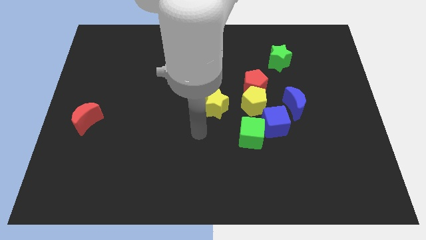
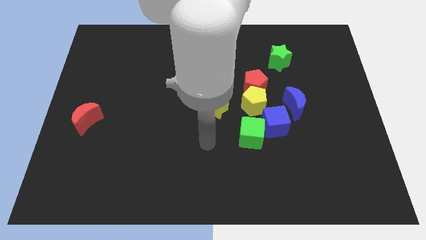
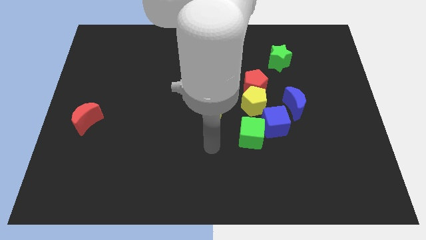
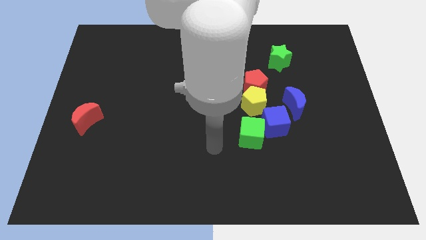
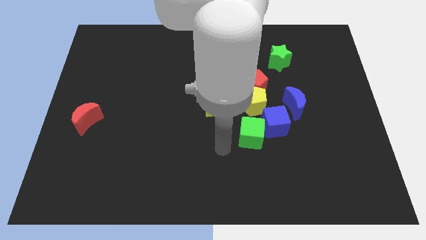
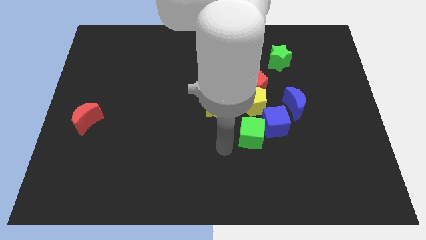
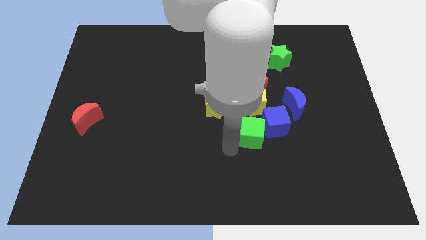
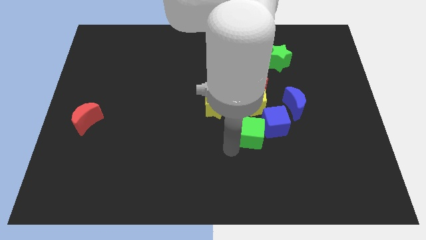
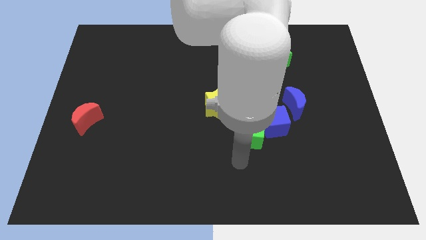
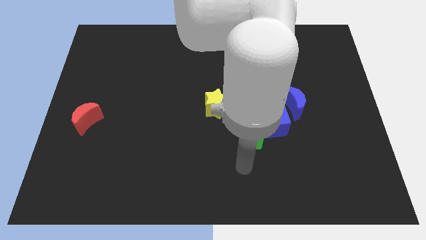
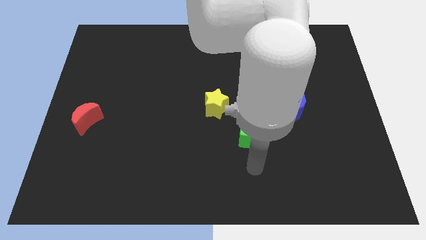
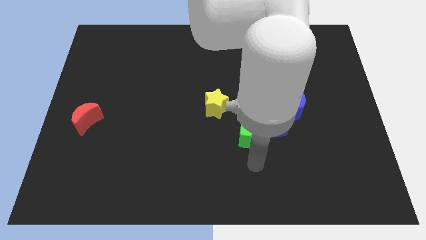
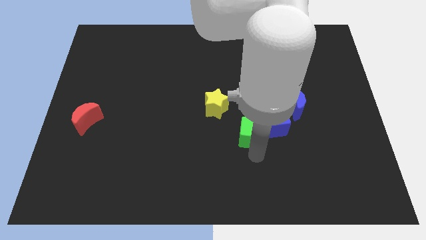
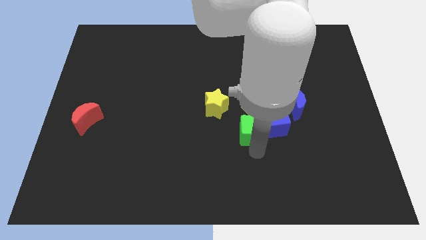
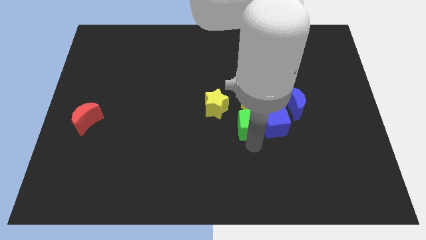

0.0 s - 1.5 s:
push green cube slightly upwards

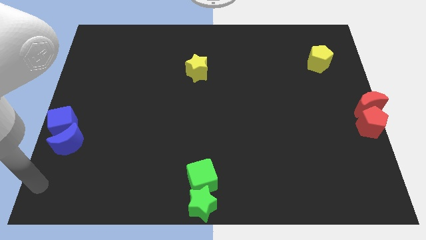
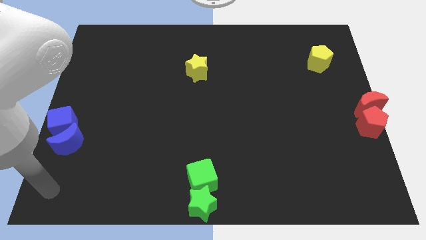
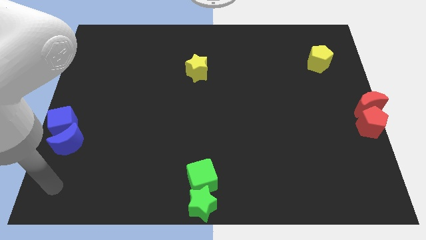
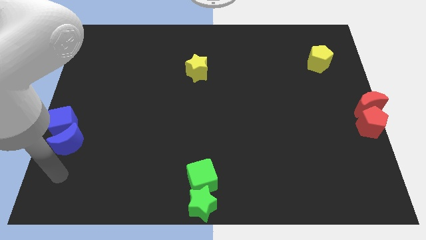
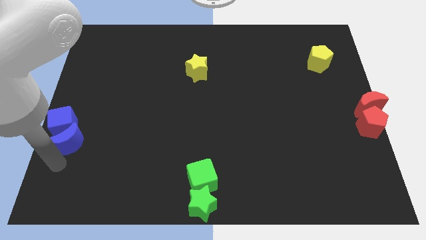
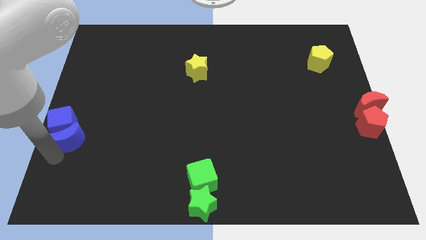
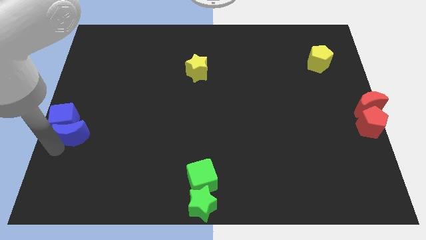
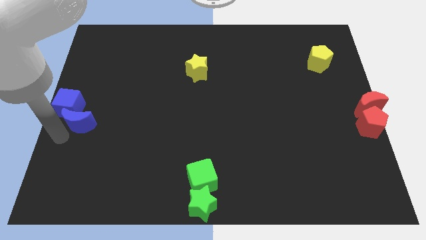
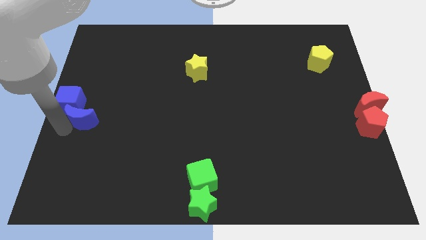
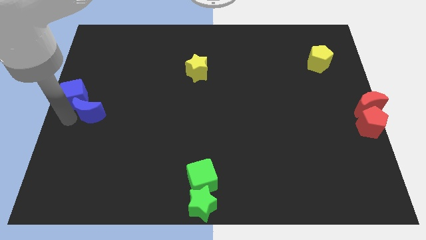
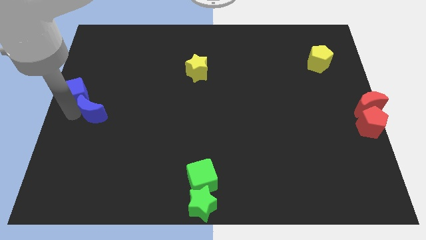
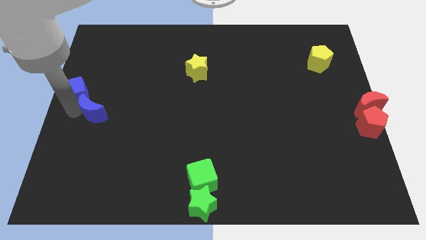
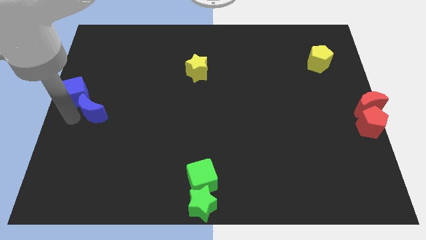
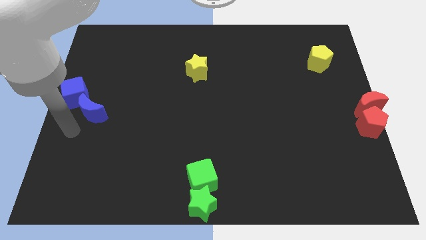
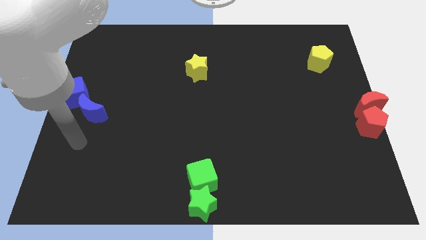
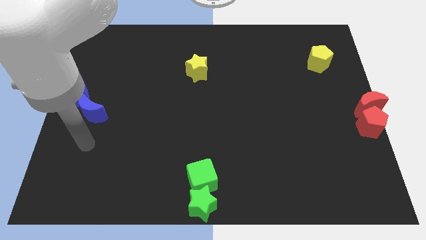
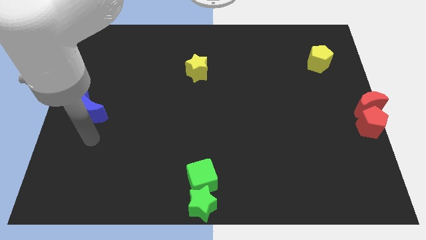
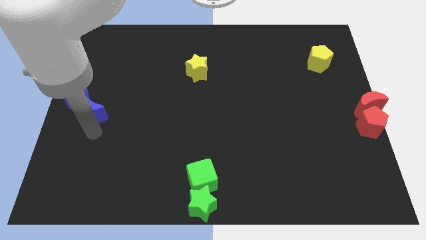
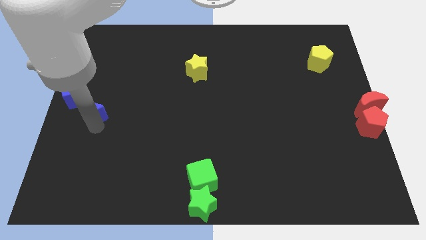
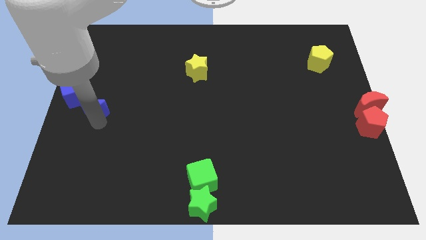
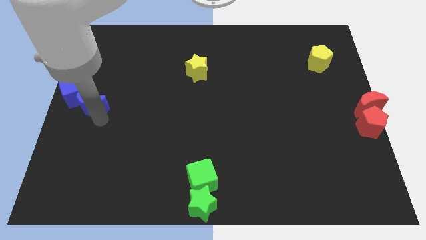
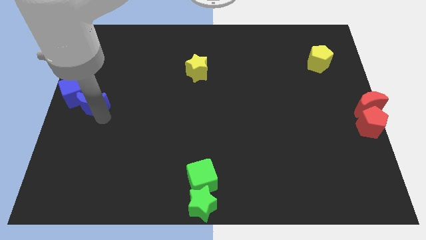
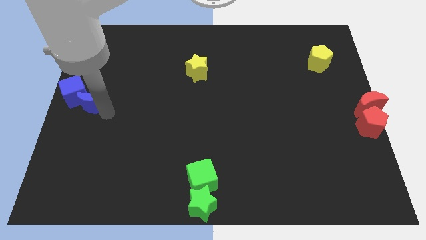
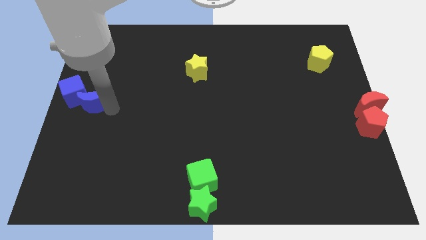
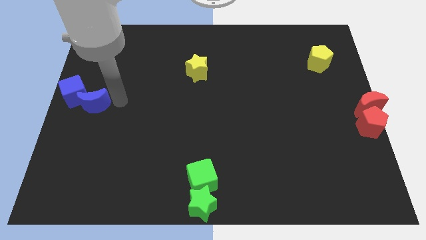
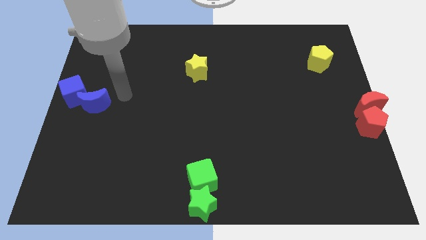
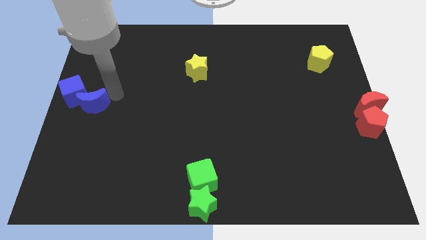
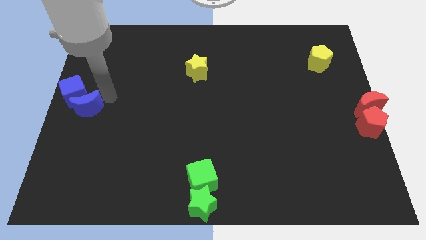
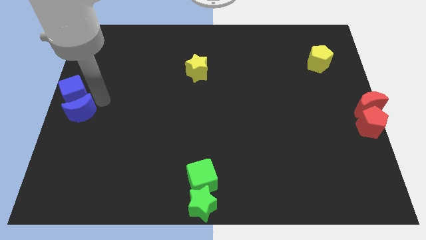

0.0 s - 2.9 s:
place the blue blocks to the center left side of the board

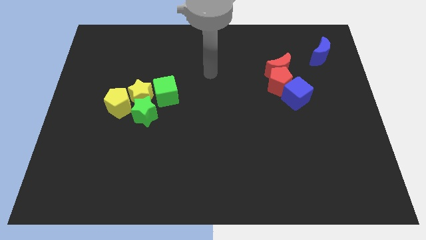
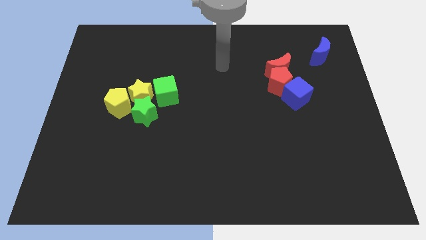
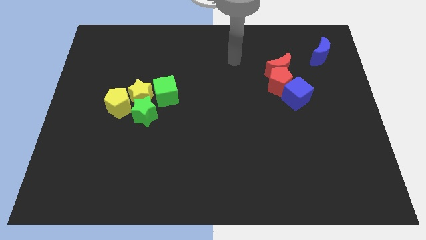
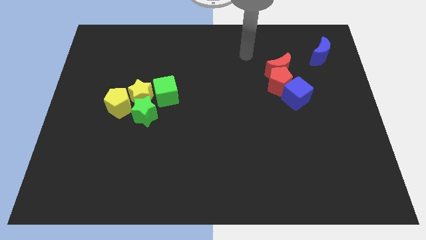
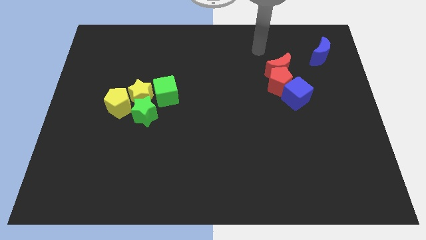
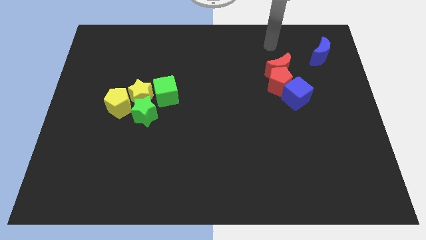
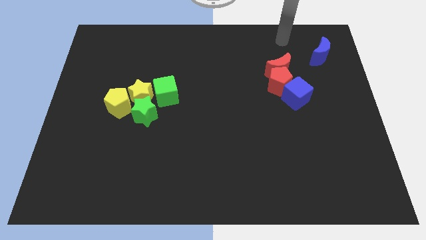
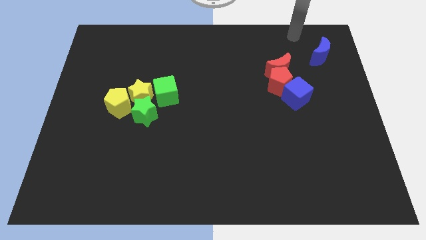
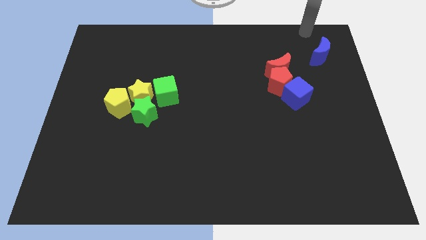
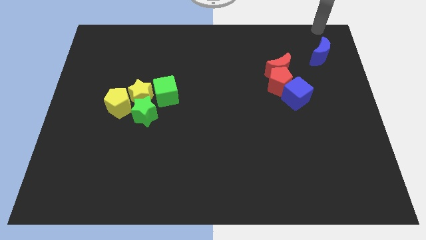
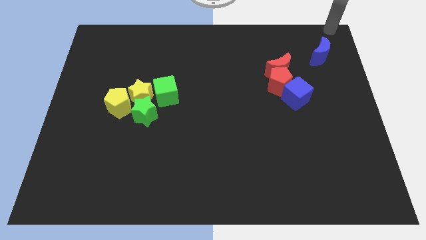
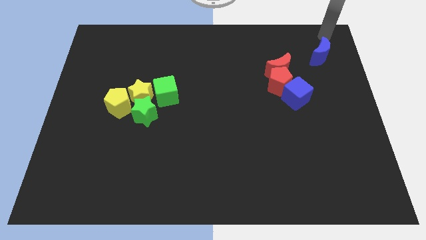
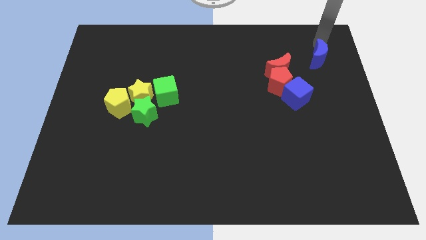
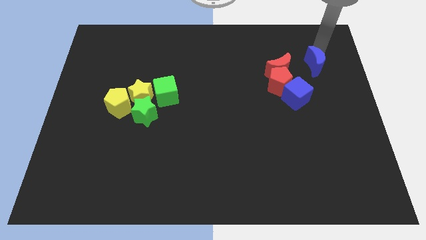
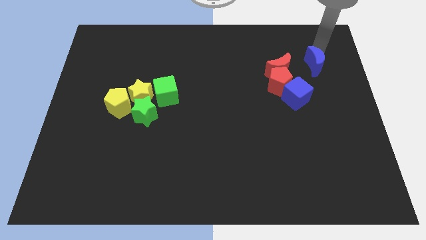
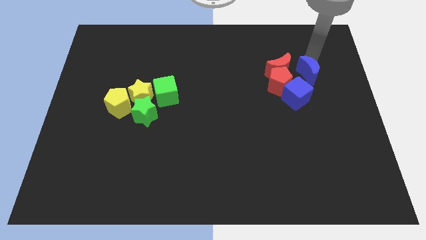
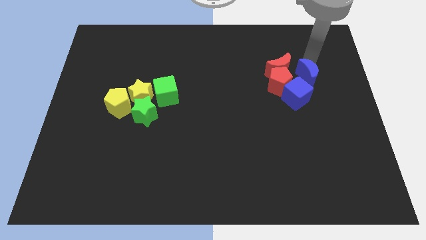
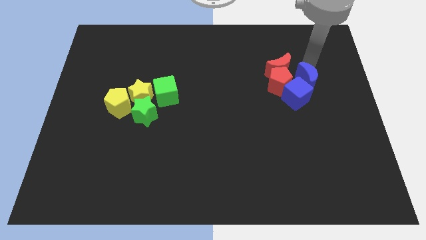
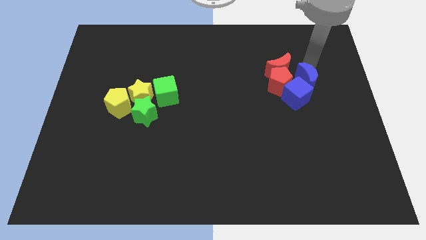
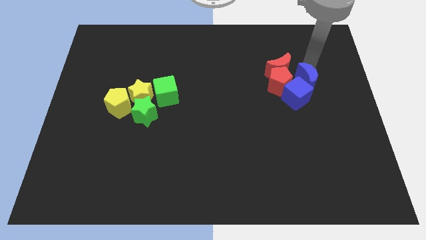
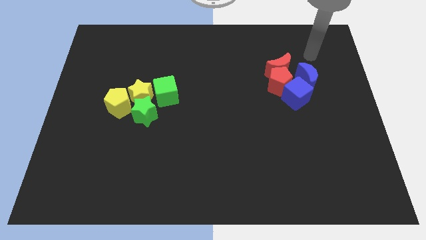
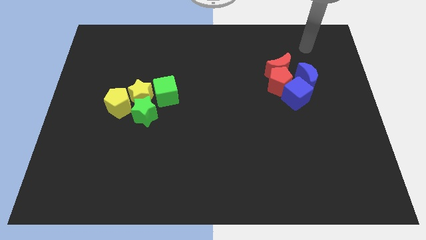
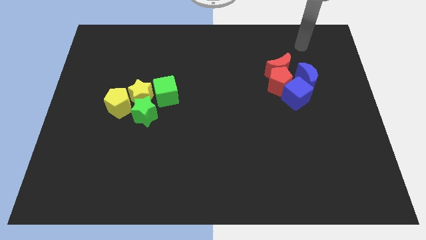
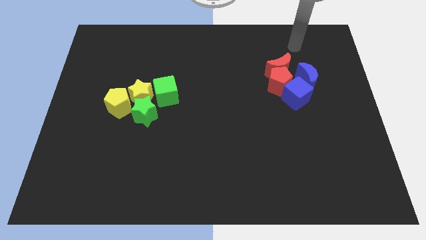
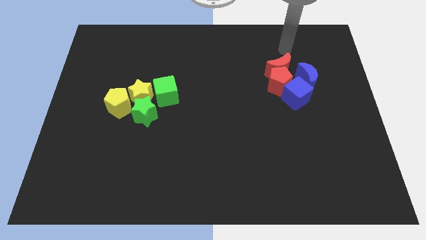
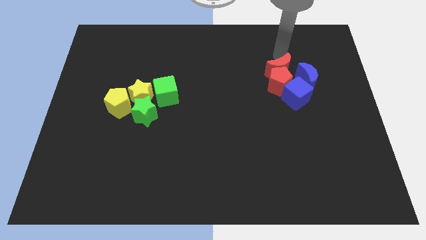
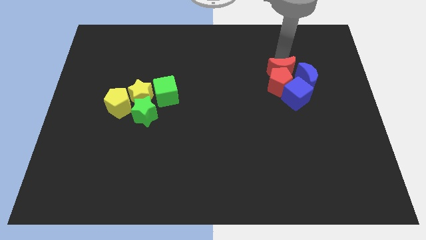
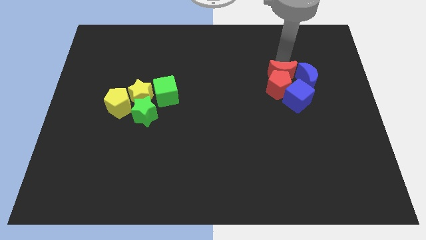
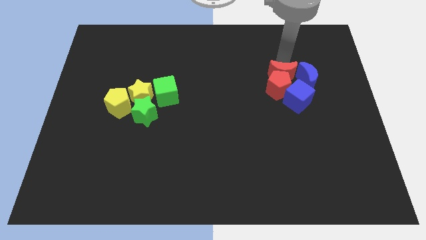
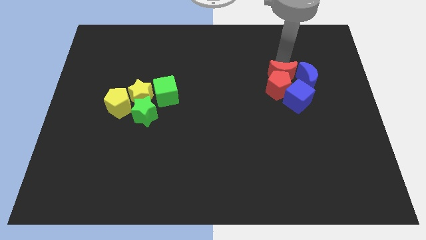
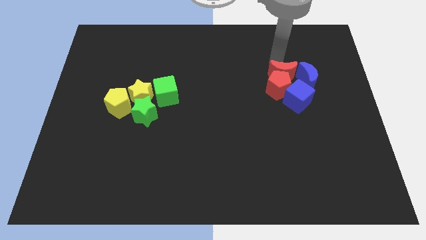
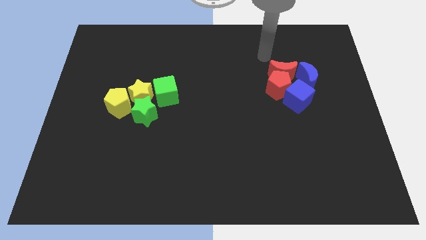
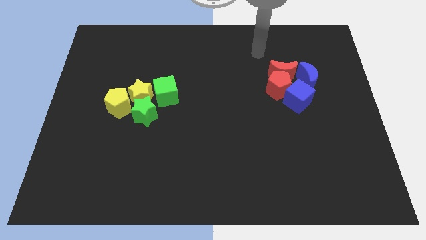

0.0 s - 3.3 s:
add the blue crescent into the group of red blocks and blue cube

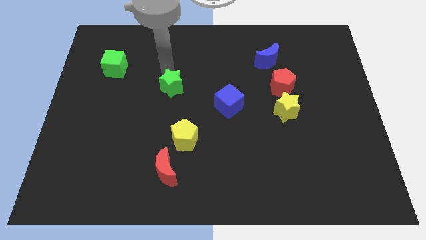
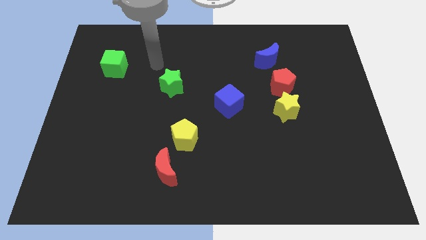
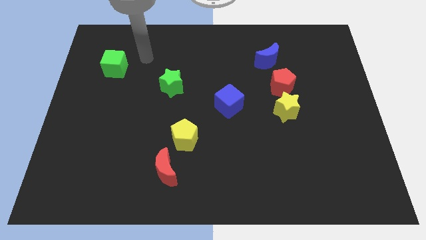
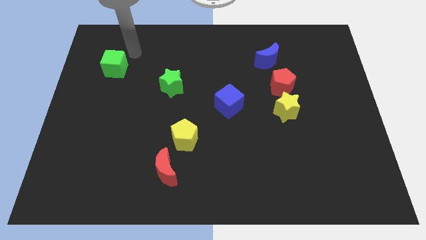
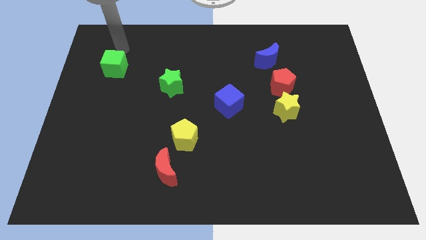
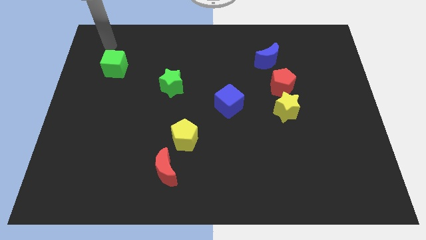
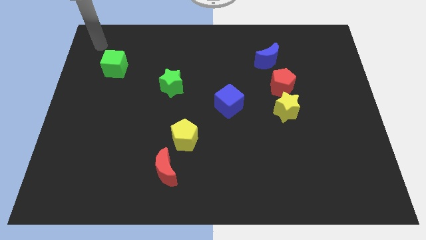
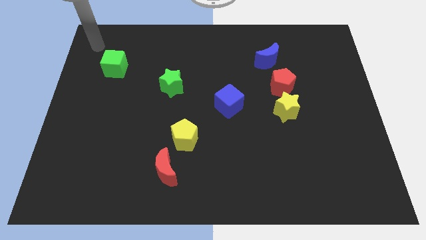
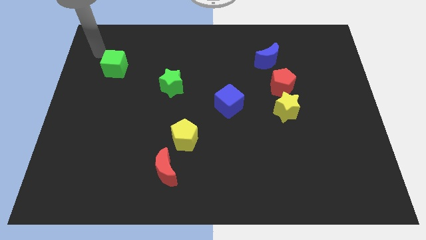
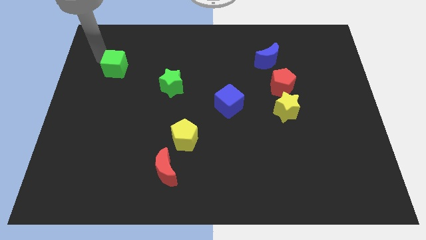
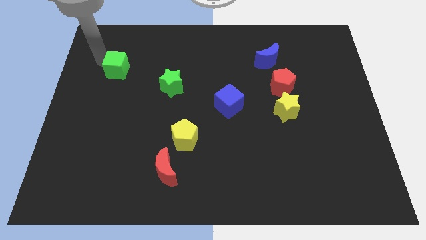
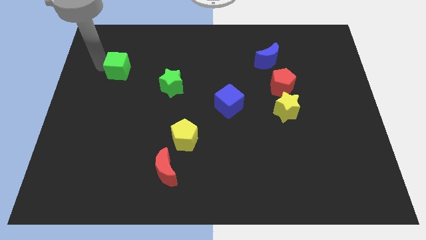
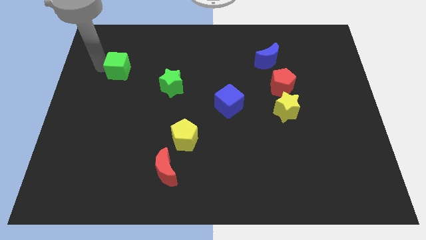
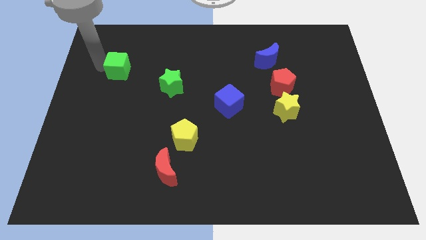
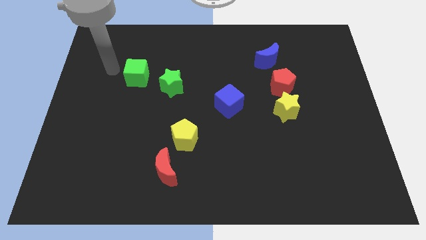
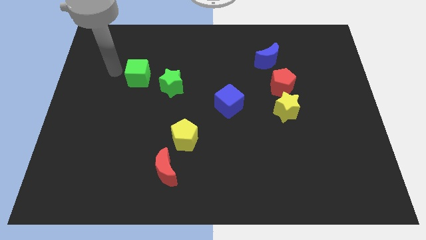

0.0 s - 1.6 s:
push the green cube towards the green star
